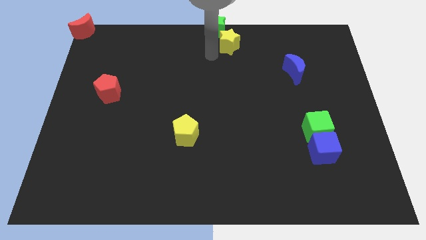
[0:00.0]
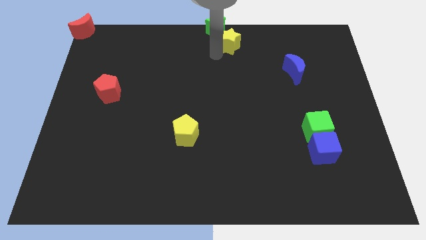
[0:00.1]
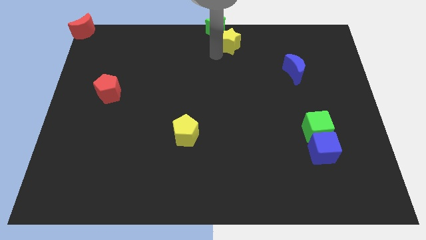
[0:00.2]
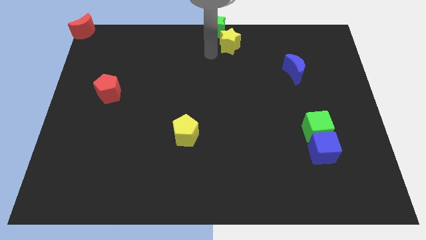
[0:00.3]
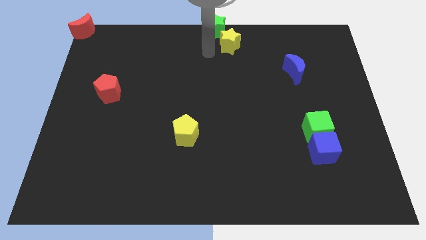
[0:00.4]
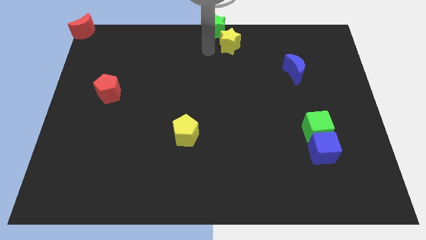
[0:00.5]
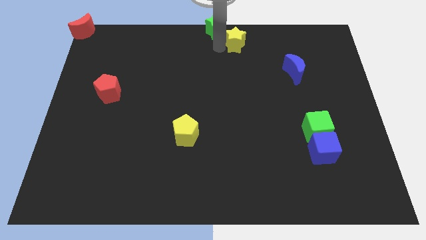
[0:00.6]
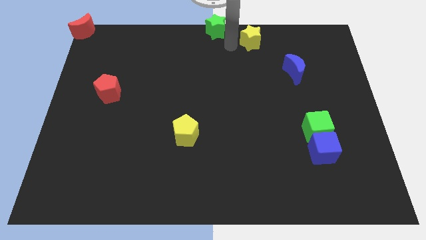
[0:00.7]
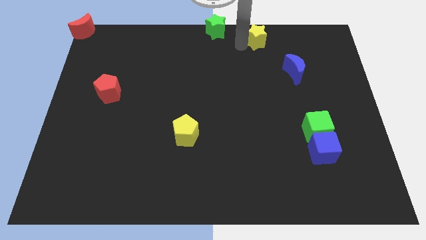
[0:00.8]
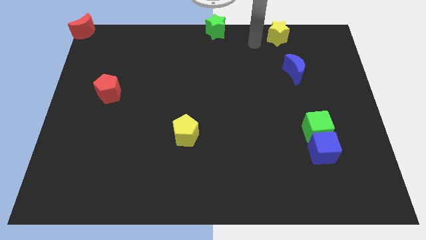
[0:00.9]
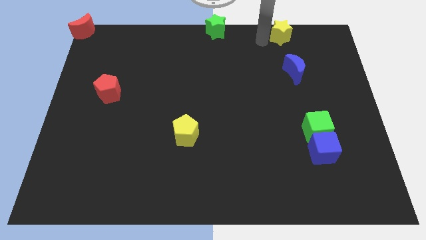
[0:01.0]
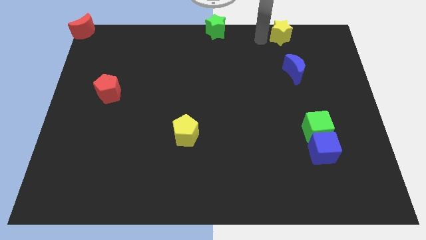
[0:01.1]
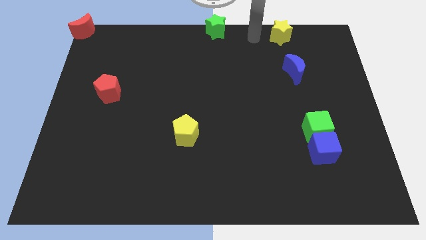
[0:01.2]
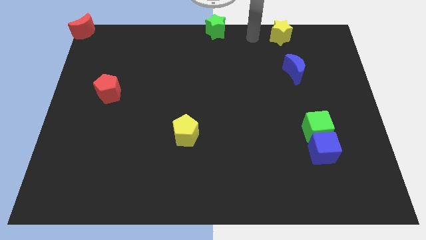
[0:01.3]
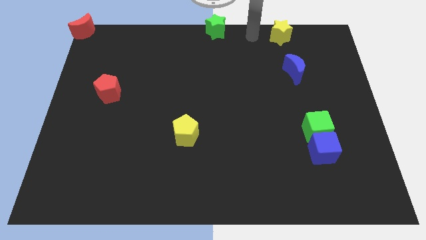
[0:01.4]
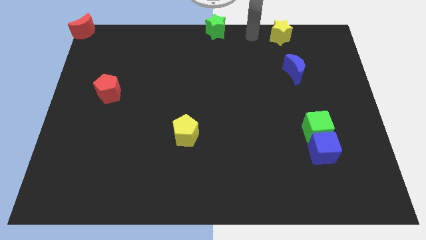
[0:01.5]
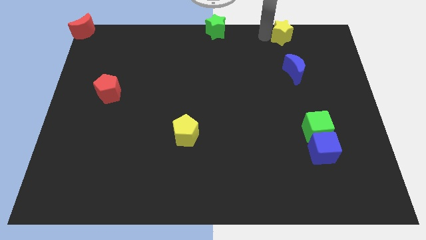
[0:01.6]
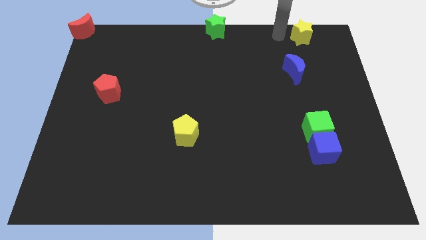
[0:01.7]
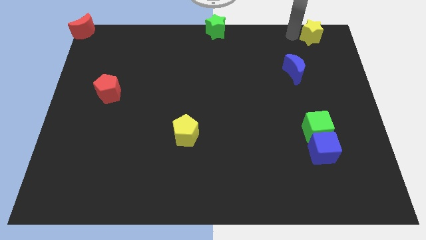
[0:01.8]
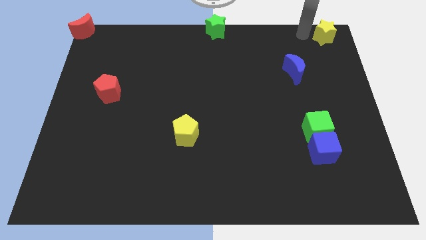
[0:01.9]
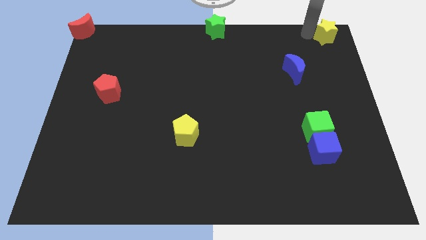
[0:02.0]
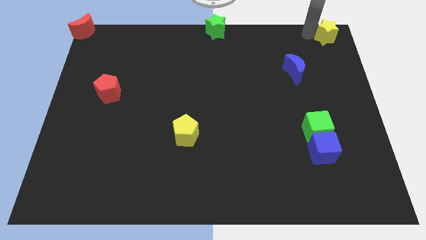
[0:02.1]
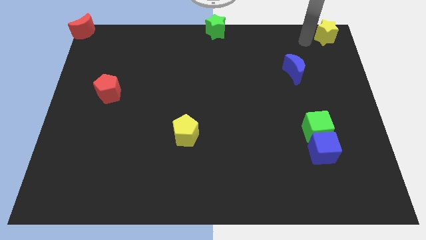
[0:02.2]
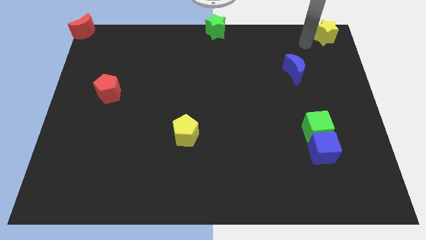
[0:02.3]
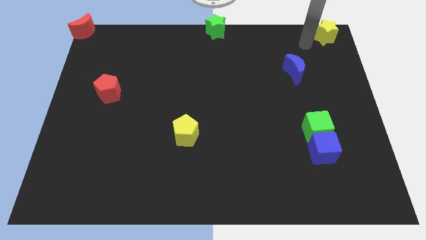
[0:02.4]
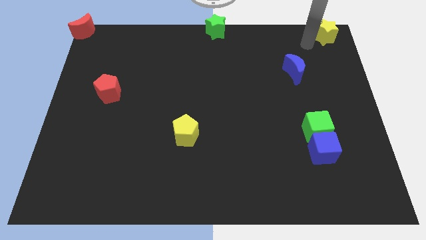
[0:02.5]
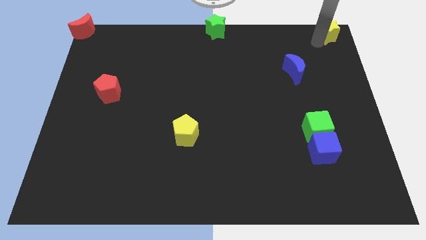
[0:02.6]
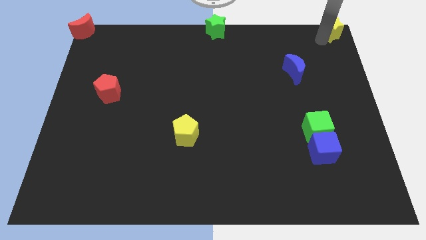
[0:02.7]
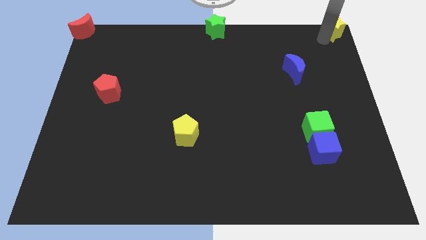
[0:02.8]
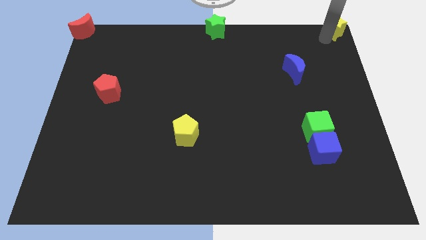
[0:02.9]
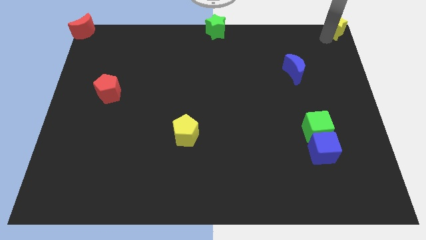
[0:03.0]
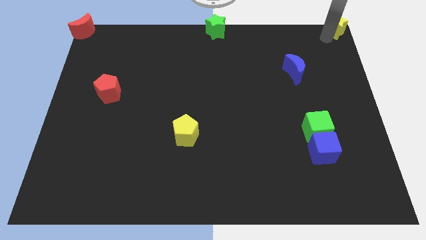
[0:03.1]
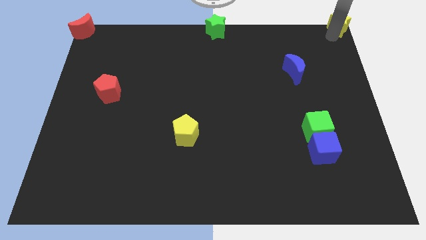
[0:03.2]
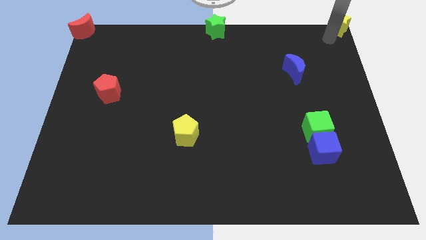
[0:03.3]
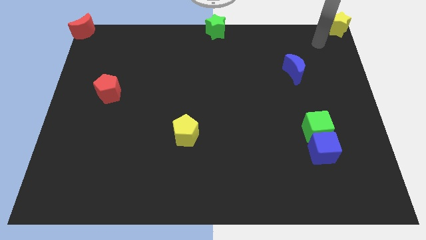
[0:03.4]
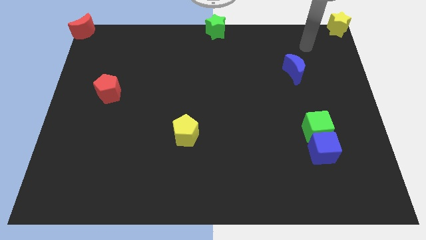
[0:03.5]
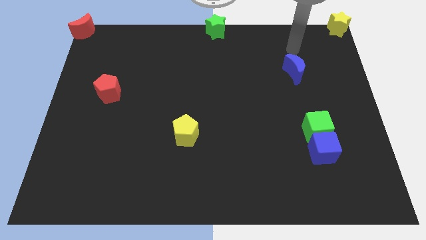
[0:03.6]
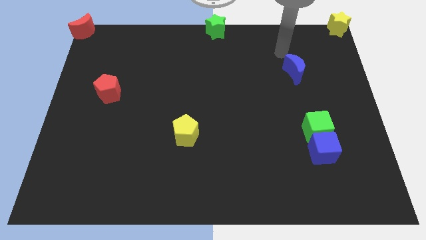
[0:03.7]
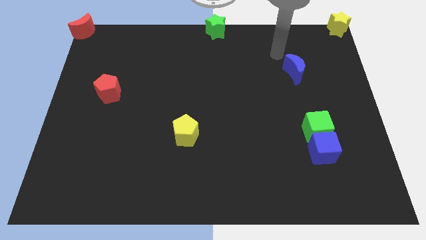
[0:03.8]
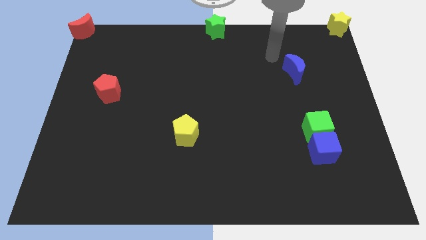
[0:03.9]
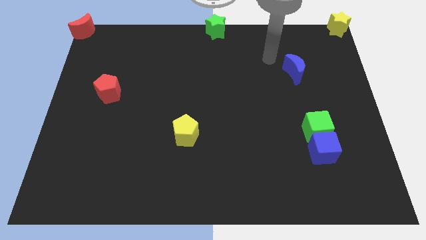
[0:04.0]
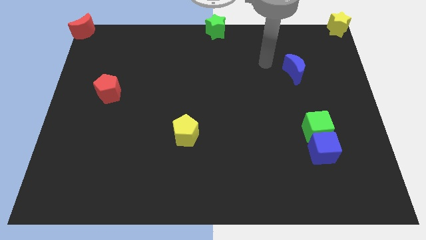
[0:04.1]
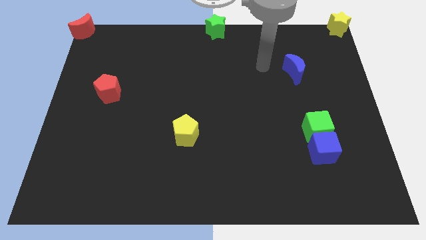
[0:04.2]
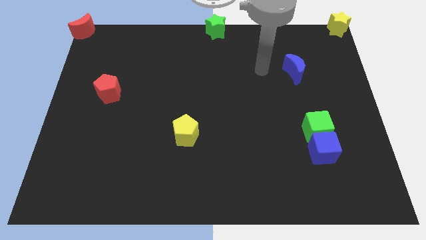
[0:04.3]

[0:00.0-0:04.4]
place the yellow star at the top right corner

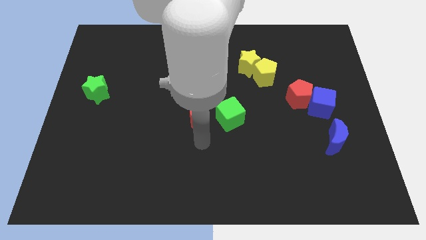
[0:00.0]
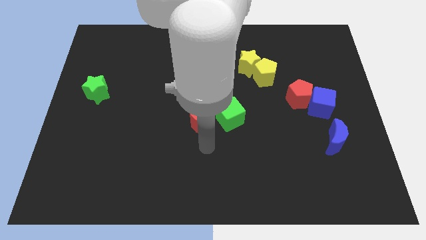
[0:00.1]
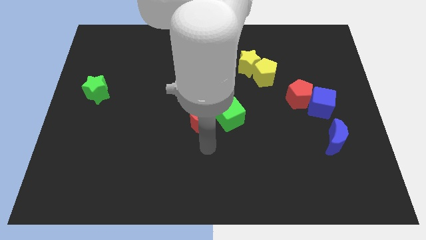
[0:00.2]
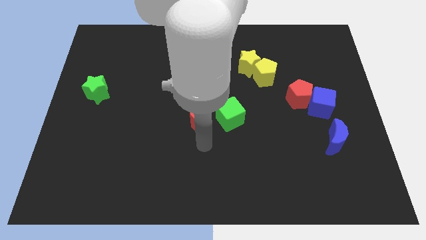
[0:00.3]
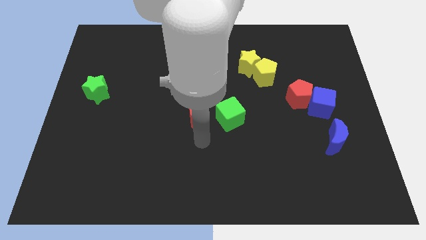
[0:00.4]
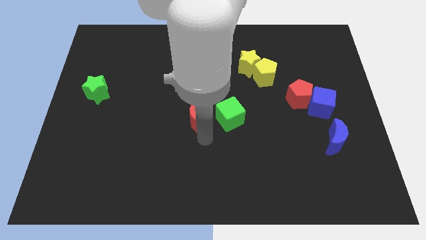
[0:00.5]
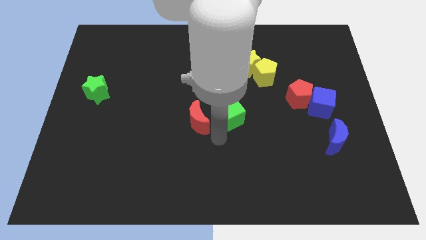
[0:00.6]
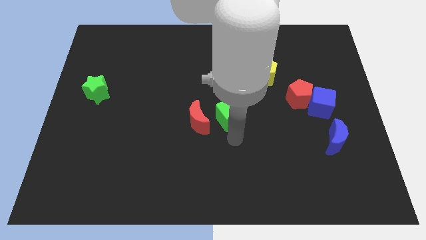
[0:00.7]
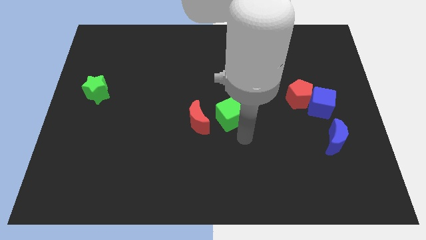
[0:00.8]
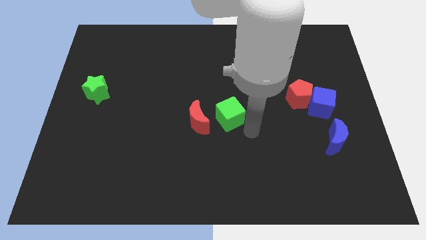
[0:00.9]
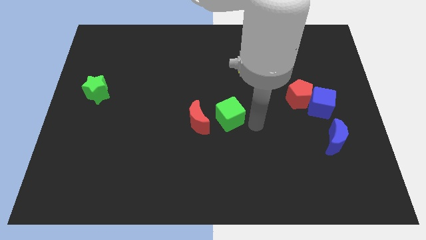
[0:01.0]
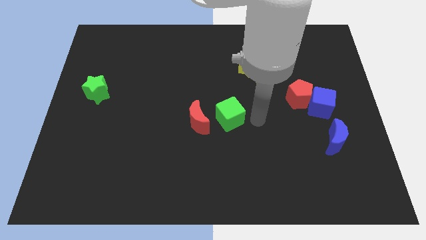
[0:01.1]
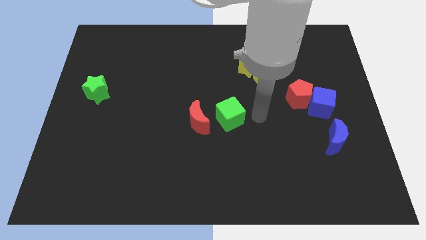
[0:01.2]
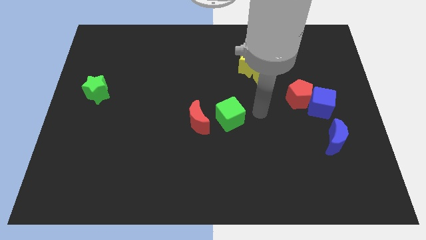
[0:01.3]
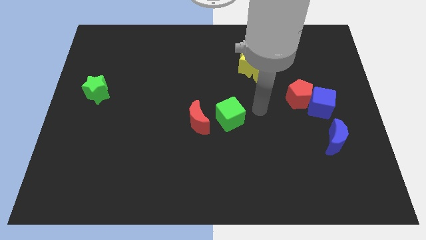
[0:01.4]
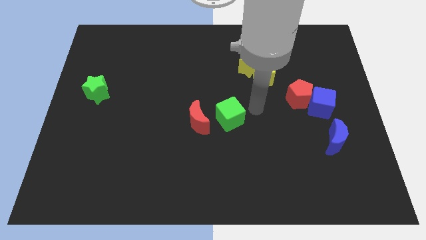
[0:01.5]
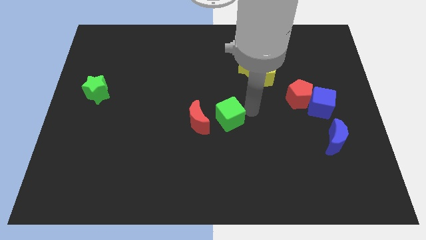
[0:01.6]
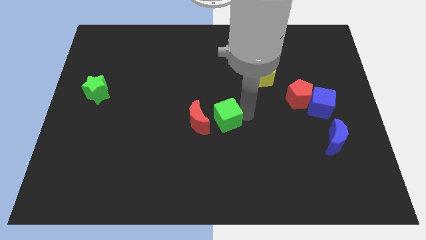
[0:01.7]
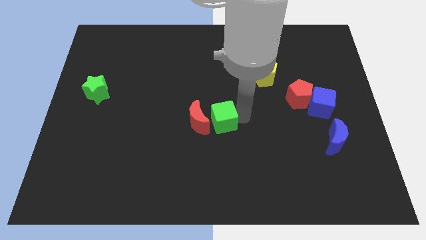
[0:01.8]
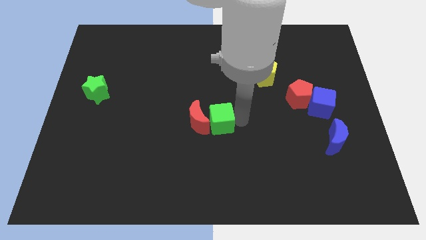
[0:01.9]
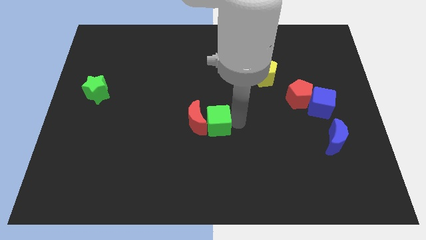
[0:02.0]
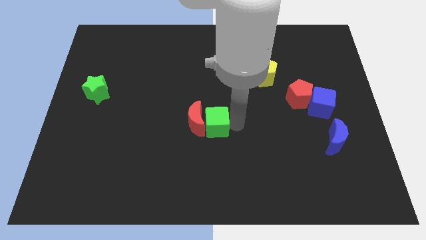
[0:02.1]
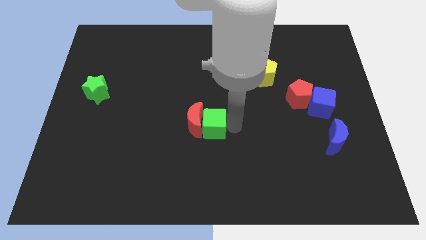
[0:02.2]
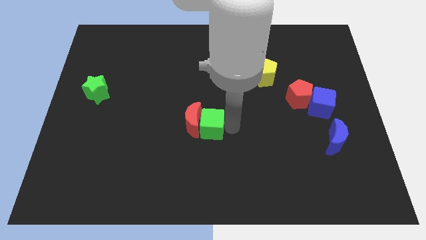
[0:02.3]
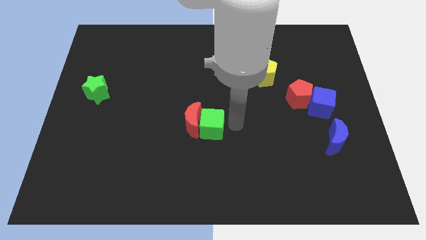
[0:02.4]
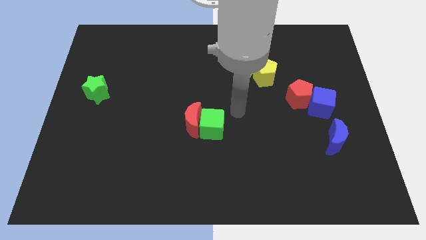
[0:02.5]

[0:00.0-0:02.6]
push the green cube into red crescent

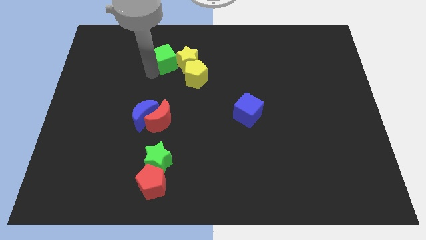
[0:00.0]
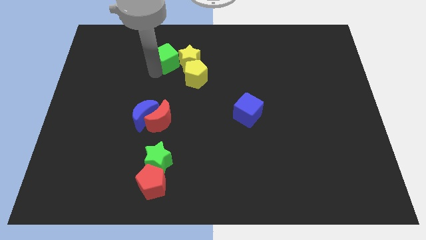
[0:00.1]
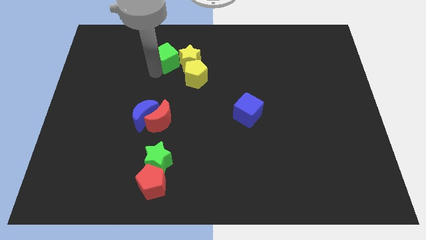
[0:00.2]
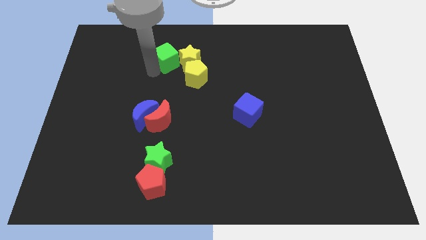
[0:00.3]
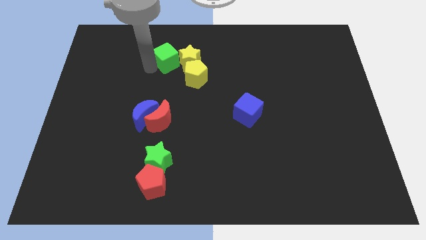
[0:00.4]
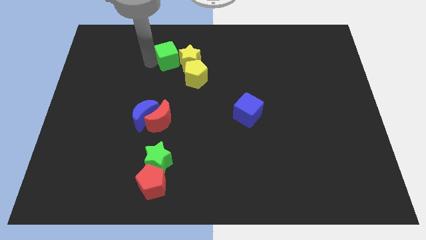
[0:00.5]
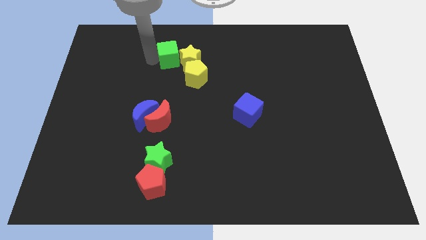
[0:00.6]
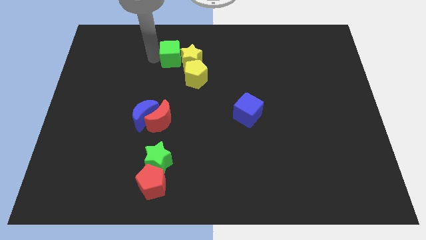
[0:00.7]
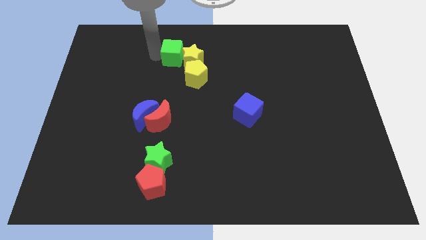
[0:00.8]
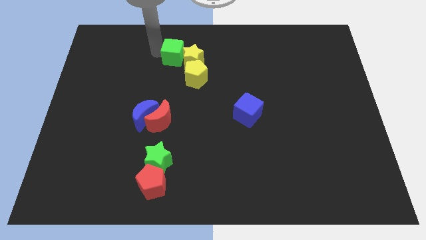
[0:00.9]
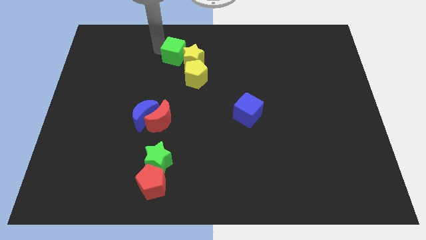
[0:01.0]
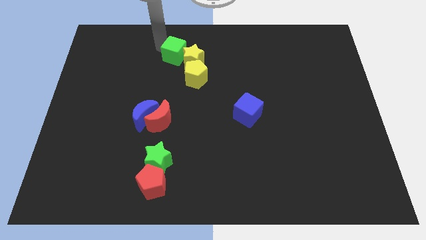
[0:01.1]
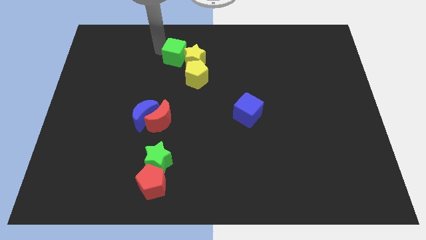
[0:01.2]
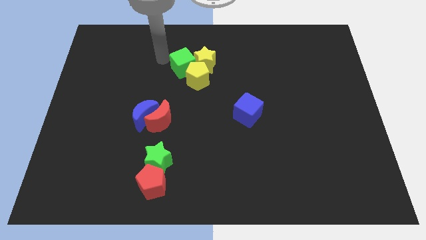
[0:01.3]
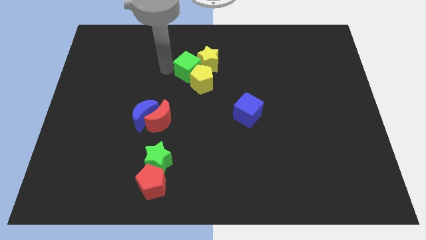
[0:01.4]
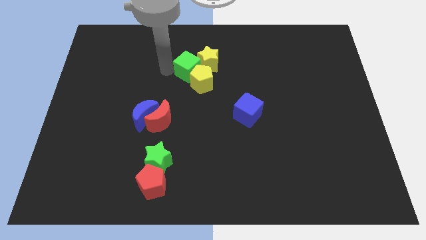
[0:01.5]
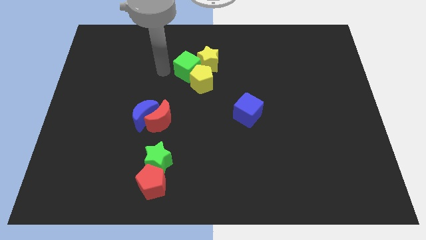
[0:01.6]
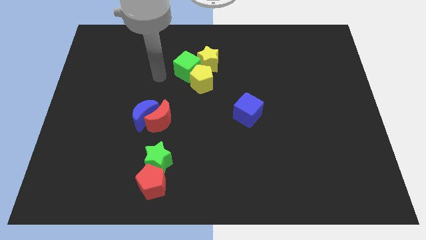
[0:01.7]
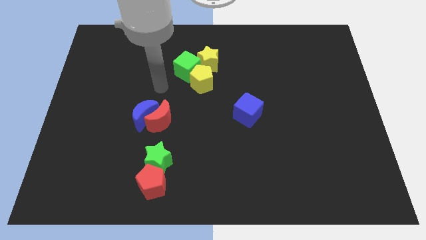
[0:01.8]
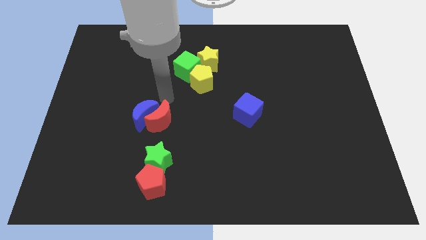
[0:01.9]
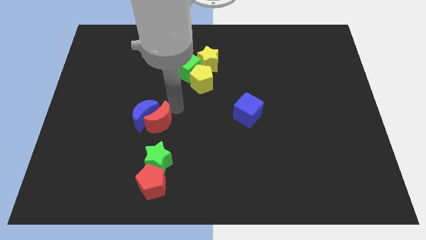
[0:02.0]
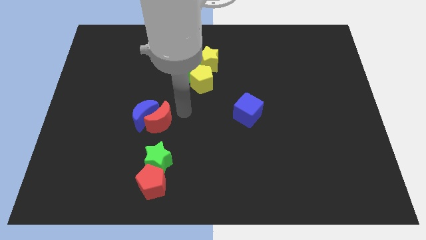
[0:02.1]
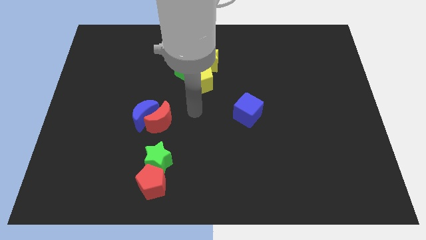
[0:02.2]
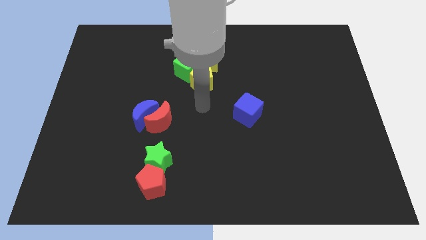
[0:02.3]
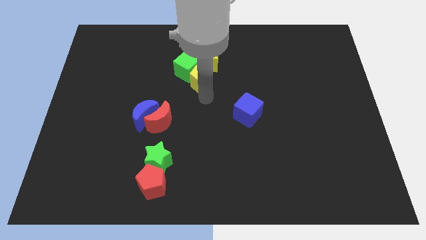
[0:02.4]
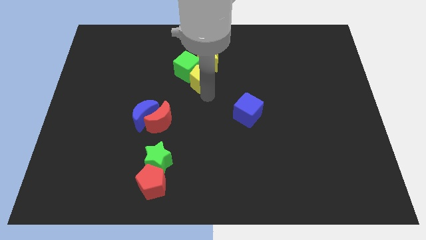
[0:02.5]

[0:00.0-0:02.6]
move the green cube close to the yellow pentagon and yellow star
